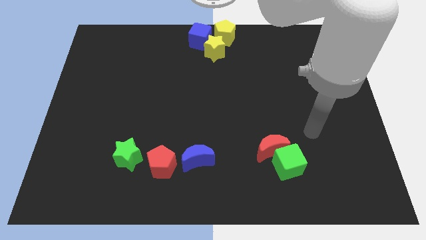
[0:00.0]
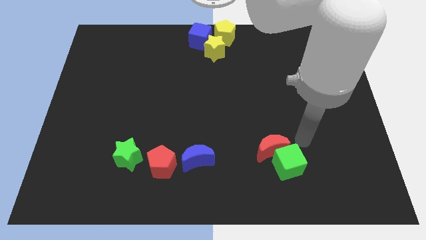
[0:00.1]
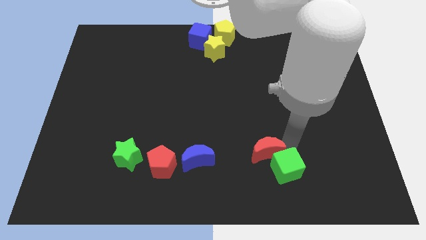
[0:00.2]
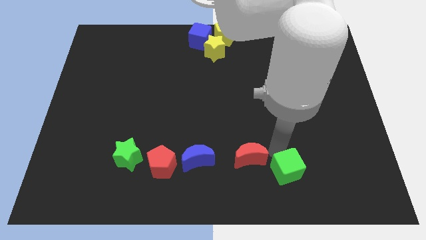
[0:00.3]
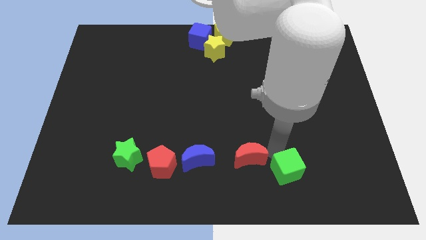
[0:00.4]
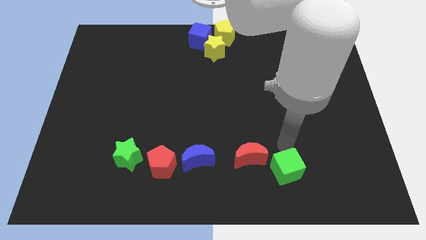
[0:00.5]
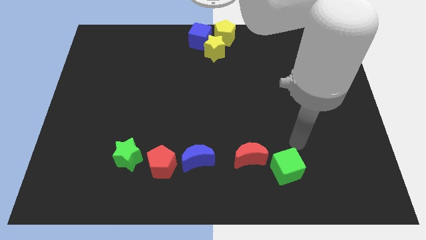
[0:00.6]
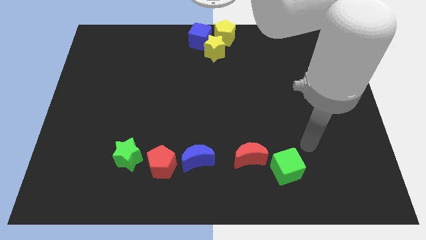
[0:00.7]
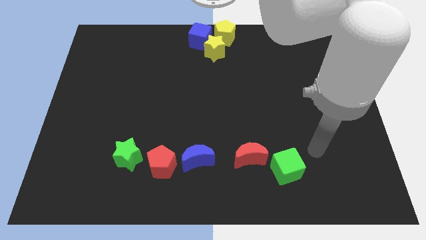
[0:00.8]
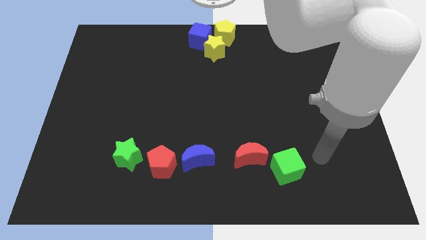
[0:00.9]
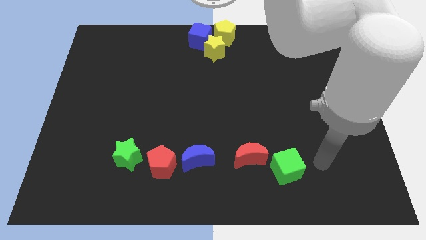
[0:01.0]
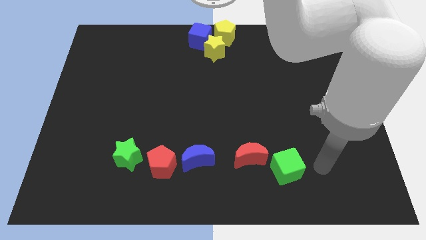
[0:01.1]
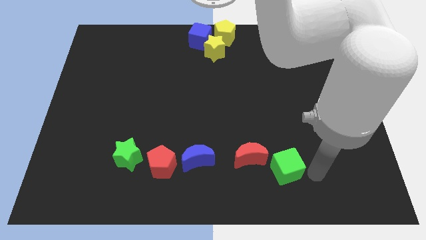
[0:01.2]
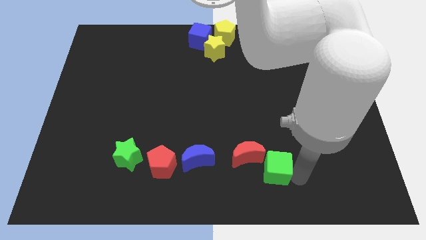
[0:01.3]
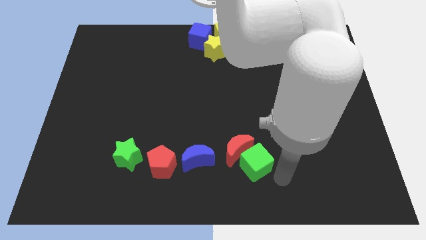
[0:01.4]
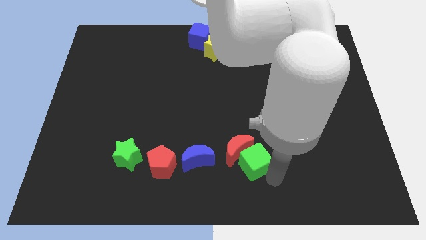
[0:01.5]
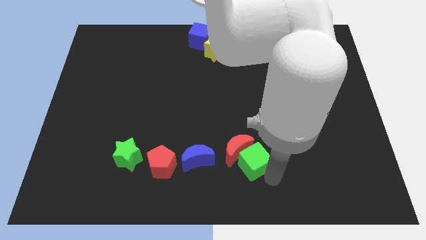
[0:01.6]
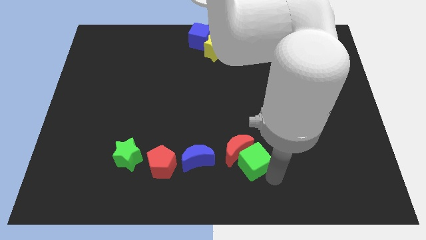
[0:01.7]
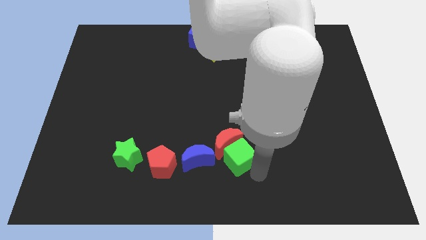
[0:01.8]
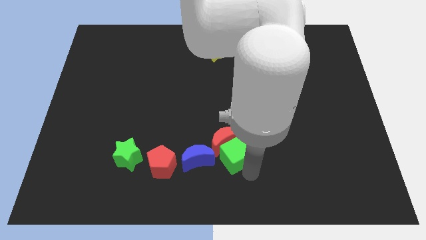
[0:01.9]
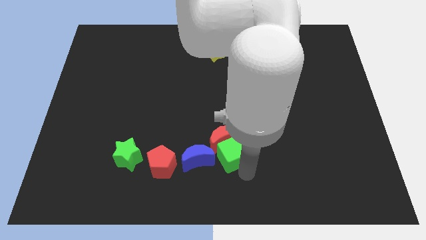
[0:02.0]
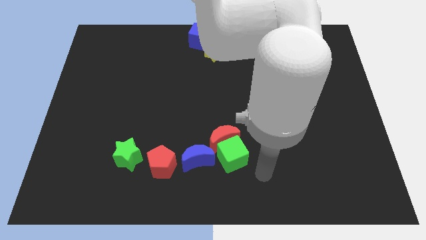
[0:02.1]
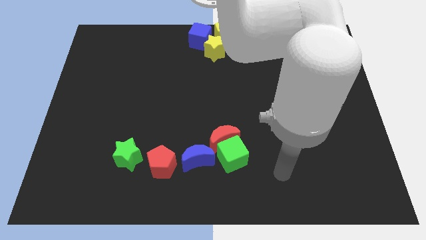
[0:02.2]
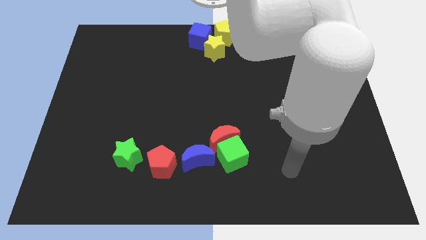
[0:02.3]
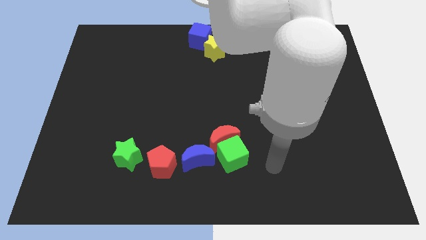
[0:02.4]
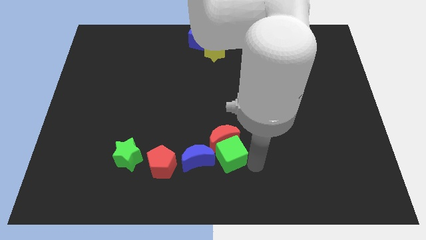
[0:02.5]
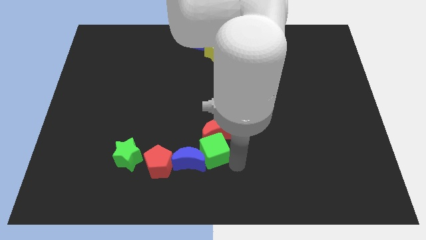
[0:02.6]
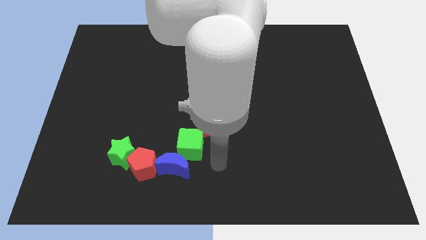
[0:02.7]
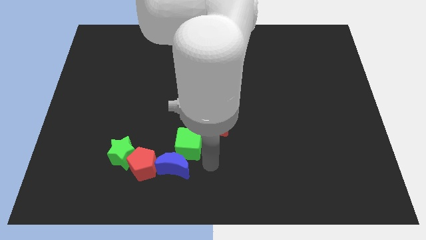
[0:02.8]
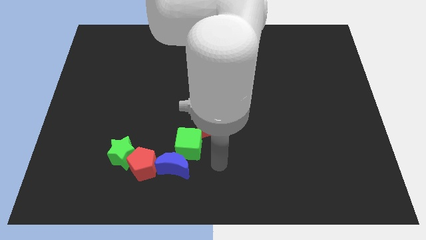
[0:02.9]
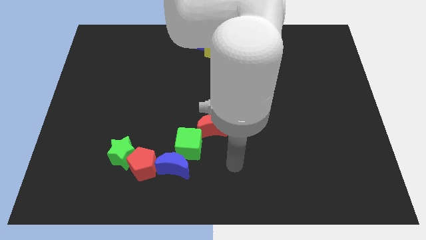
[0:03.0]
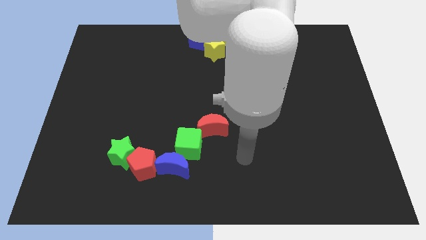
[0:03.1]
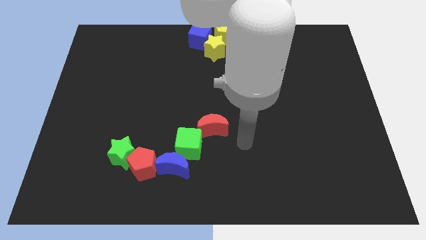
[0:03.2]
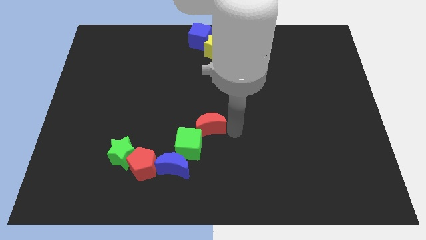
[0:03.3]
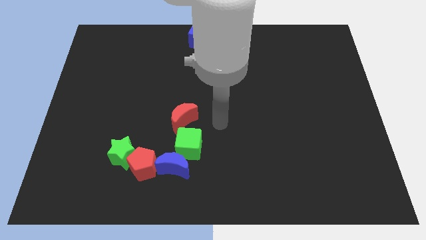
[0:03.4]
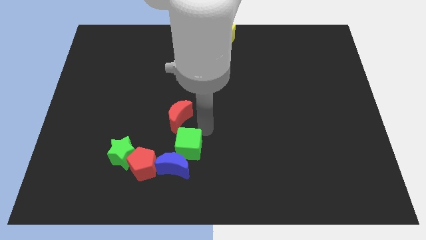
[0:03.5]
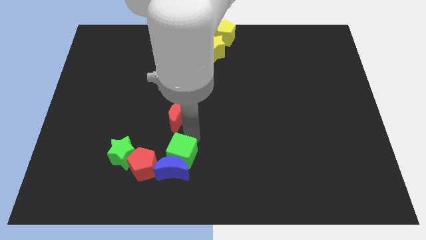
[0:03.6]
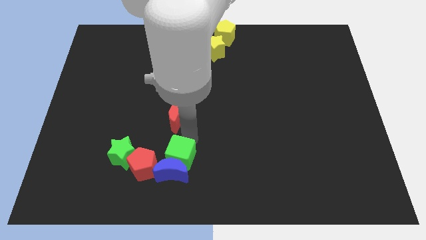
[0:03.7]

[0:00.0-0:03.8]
move the red crescent and green cube into the top side fo the blue crescent

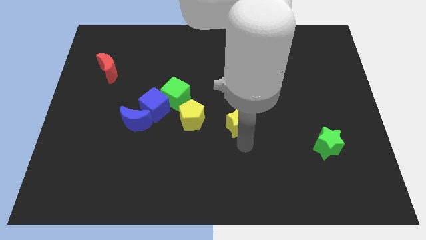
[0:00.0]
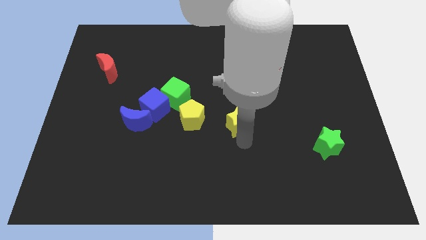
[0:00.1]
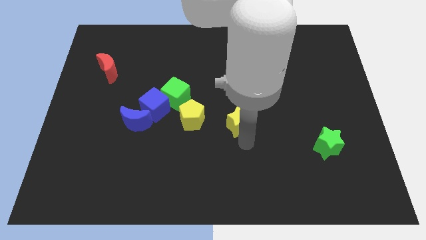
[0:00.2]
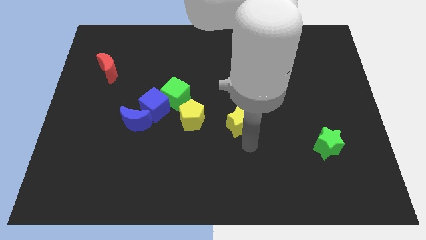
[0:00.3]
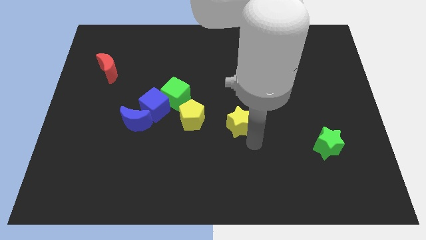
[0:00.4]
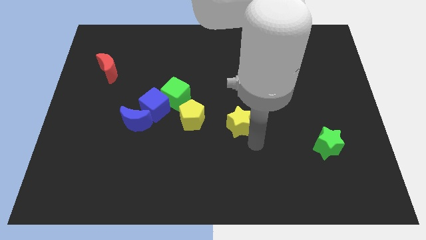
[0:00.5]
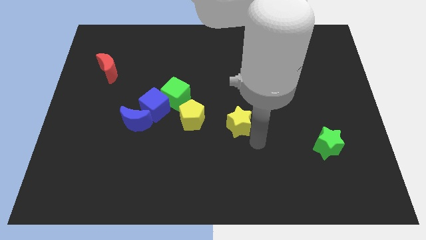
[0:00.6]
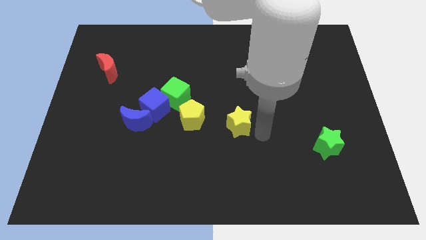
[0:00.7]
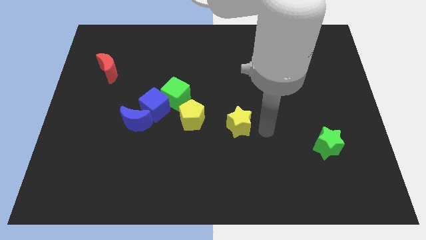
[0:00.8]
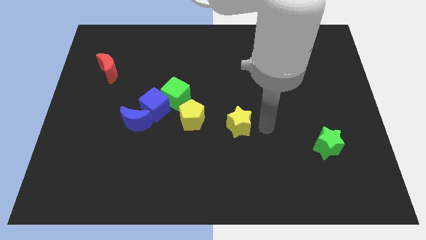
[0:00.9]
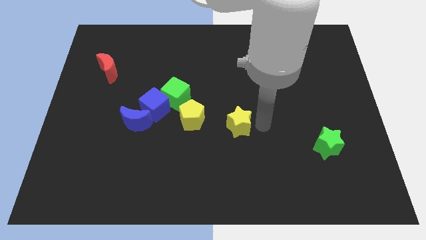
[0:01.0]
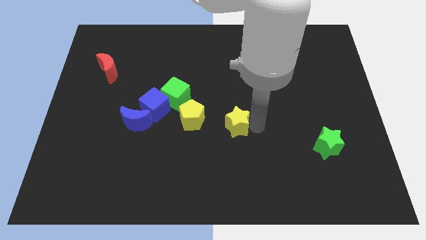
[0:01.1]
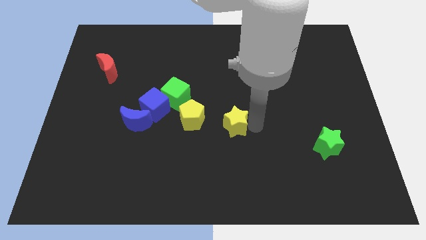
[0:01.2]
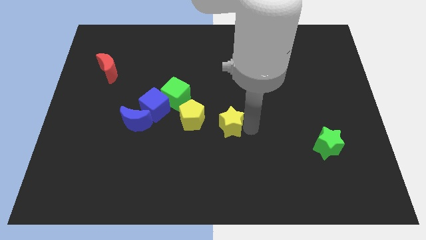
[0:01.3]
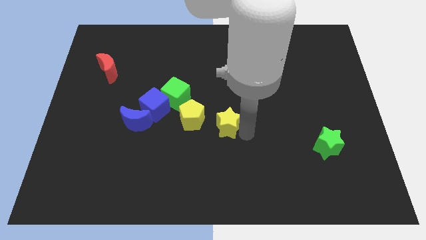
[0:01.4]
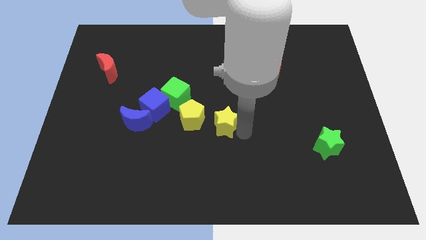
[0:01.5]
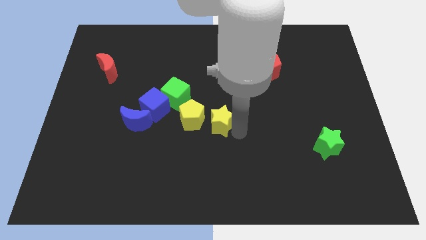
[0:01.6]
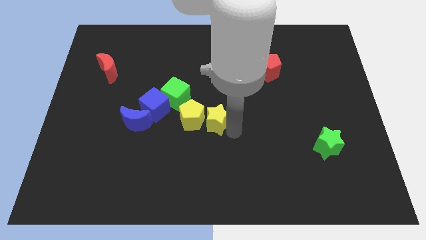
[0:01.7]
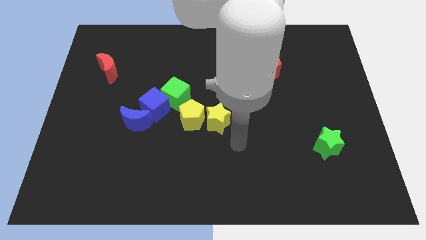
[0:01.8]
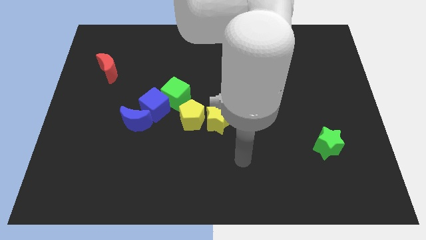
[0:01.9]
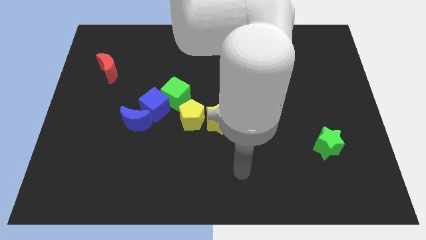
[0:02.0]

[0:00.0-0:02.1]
push the yellow star to the right of the yellow pentagon

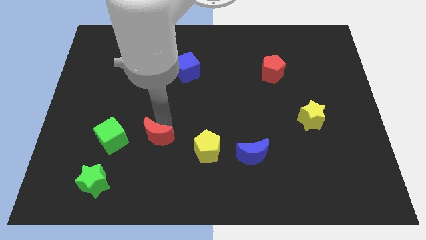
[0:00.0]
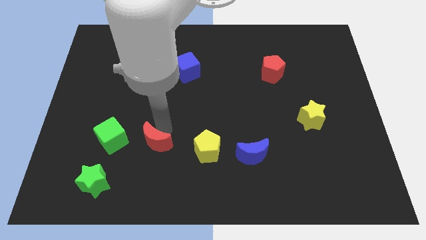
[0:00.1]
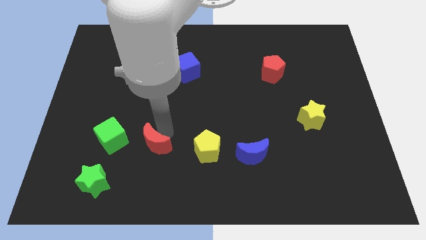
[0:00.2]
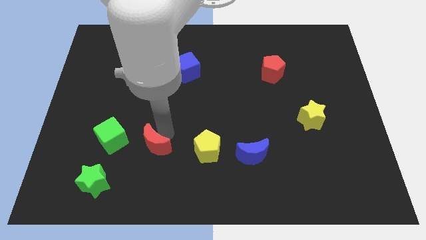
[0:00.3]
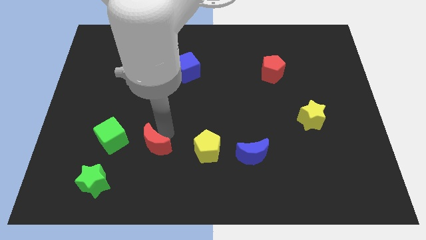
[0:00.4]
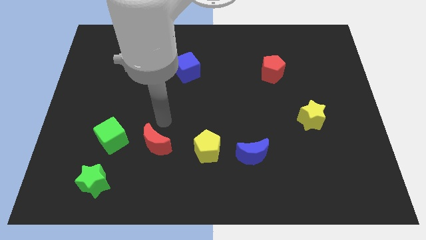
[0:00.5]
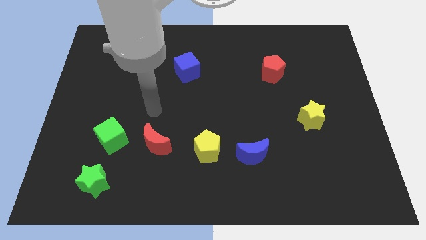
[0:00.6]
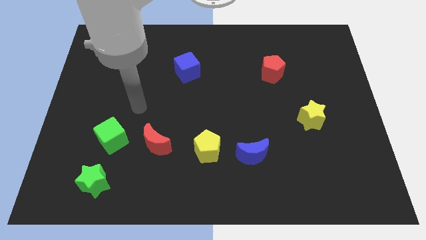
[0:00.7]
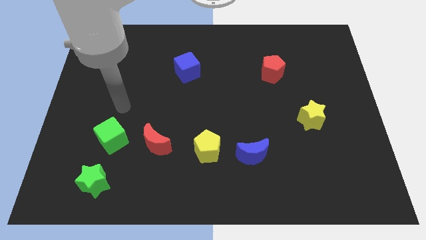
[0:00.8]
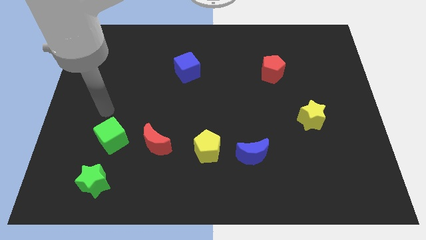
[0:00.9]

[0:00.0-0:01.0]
move red moon between the green cube and yellow pentagon

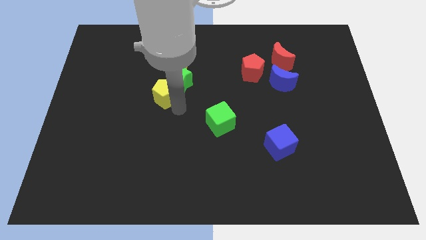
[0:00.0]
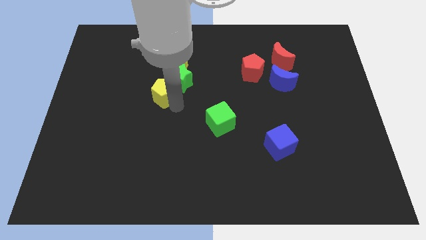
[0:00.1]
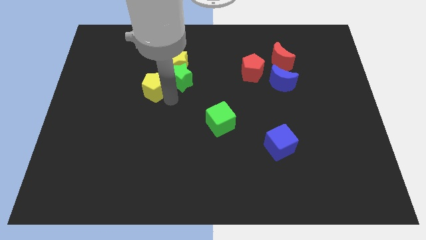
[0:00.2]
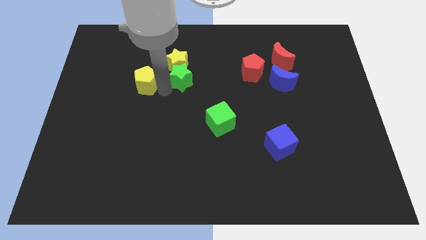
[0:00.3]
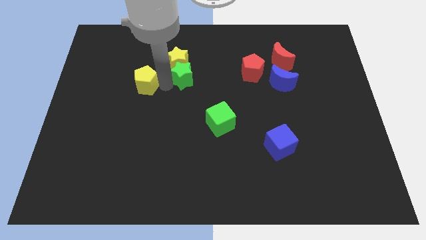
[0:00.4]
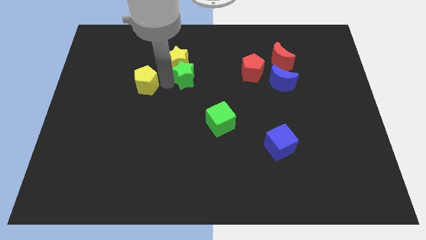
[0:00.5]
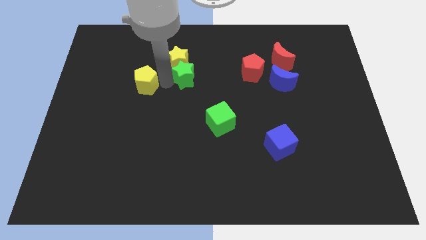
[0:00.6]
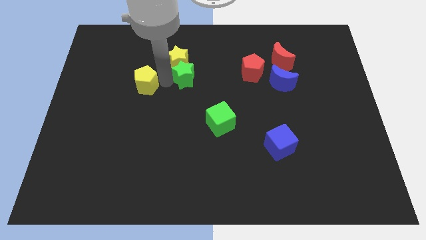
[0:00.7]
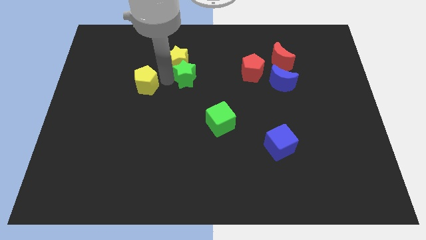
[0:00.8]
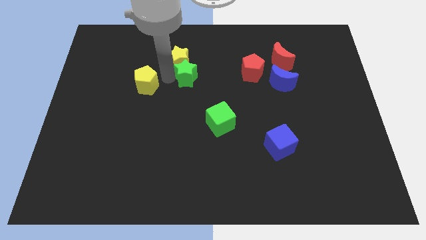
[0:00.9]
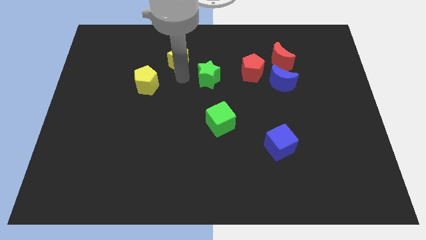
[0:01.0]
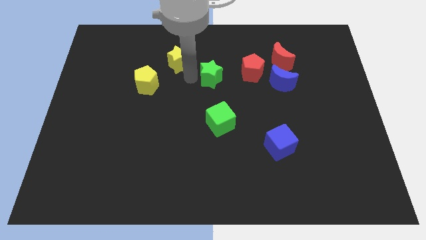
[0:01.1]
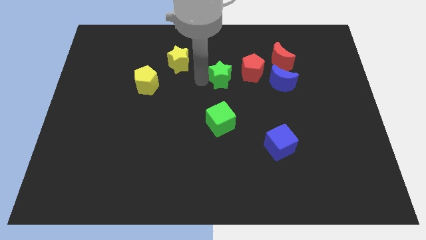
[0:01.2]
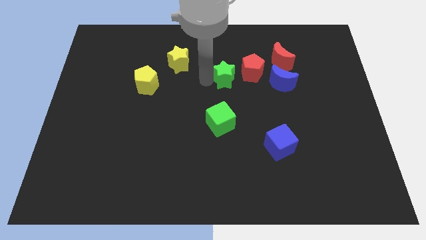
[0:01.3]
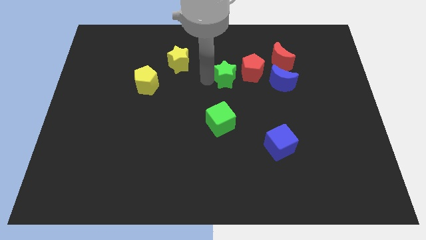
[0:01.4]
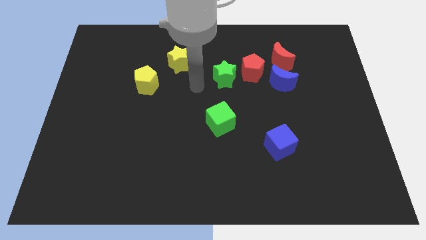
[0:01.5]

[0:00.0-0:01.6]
separate green star from two yellow blocks

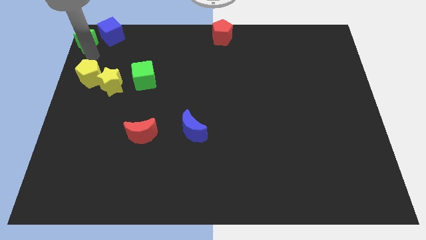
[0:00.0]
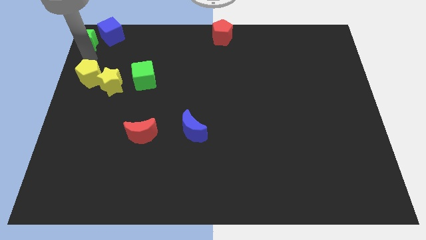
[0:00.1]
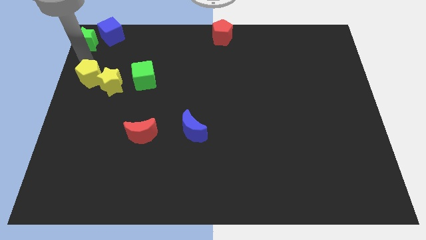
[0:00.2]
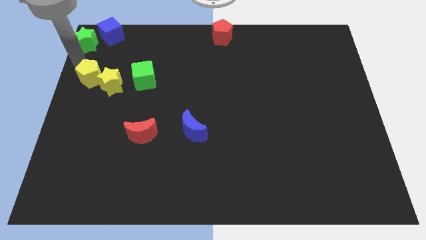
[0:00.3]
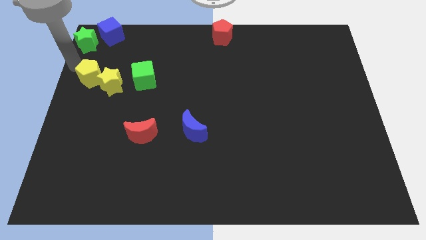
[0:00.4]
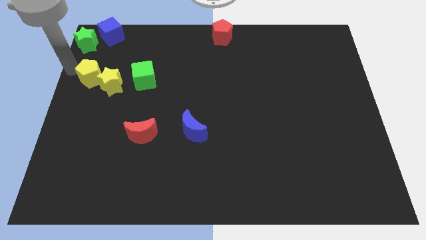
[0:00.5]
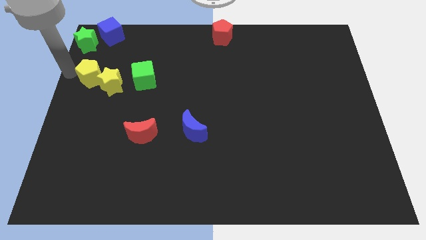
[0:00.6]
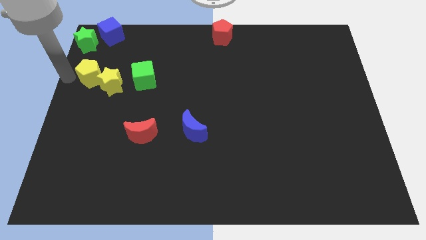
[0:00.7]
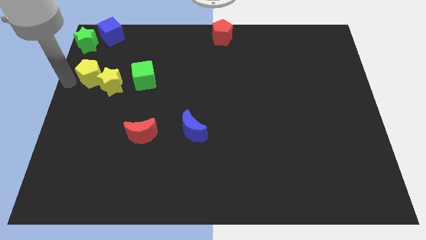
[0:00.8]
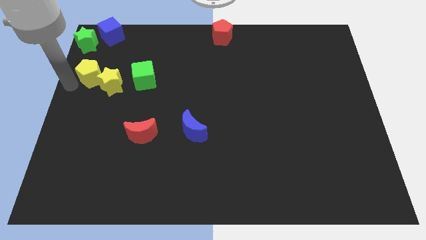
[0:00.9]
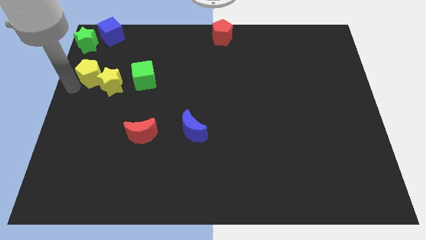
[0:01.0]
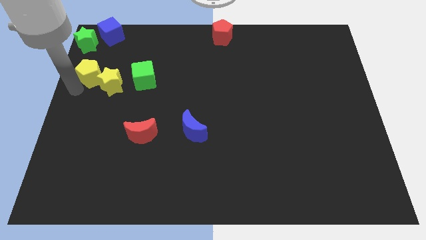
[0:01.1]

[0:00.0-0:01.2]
move your hand towards the left of the yellow pentagon
